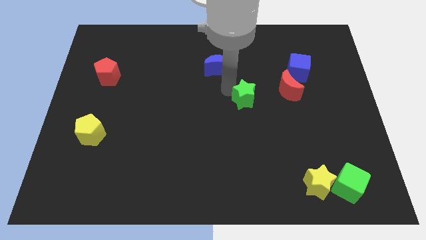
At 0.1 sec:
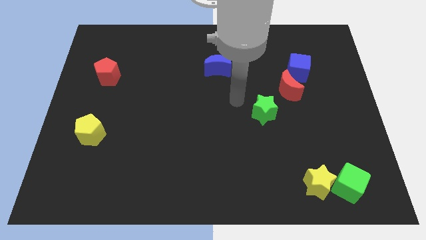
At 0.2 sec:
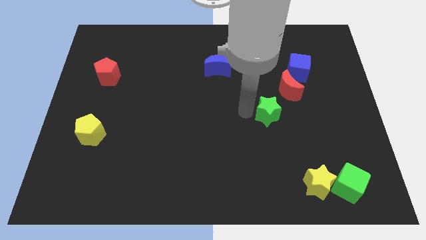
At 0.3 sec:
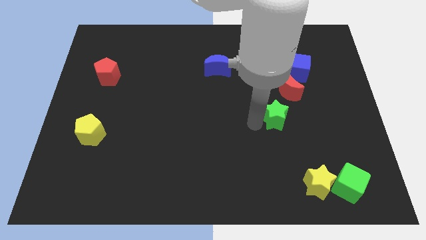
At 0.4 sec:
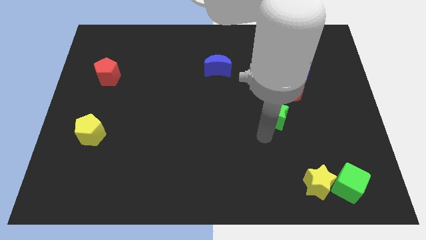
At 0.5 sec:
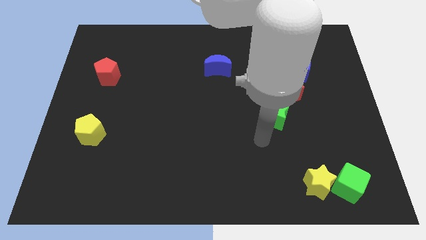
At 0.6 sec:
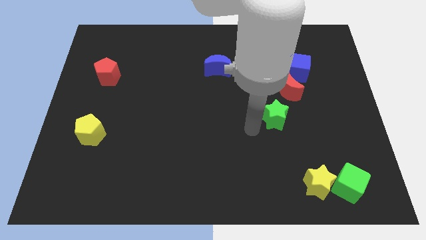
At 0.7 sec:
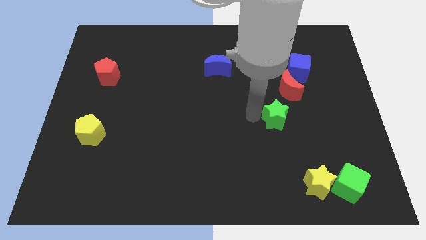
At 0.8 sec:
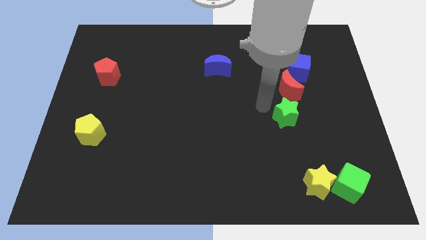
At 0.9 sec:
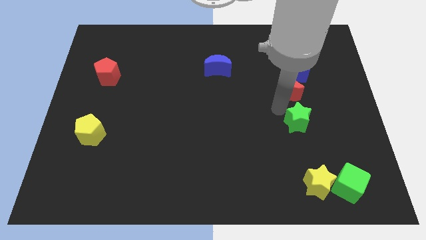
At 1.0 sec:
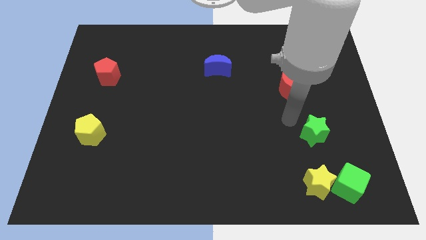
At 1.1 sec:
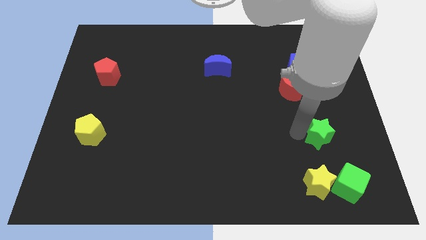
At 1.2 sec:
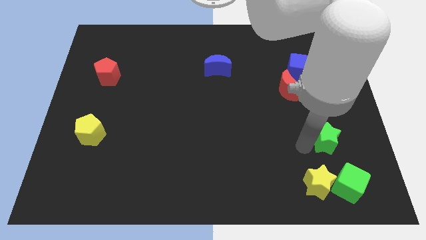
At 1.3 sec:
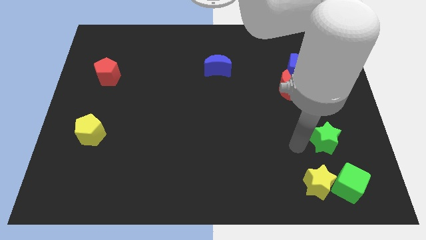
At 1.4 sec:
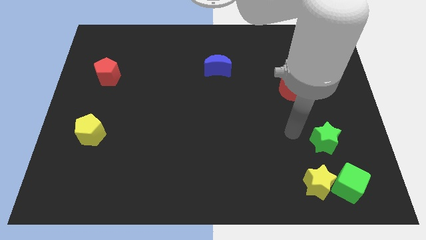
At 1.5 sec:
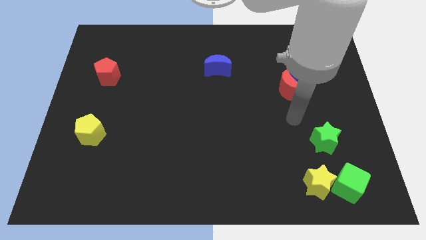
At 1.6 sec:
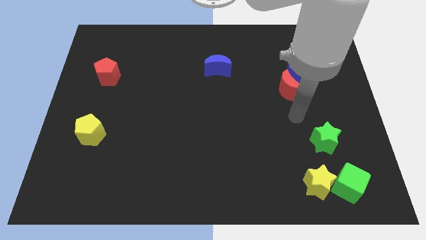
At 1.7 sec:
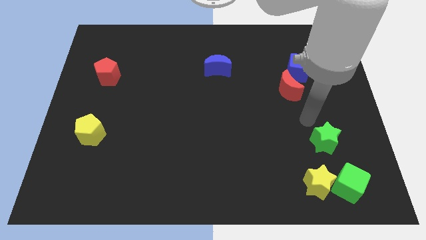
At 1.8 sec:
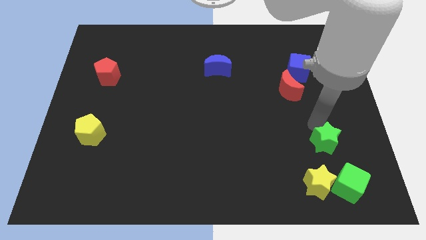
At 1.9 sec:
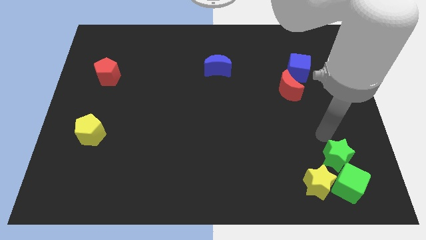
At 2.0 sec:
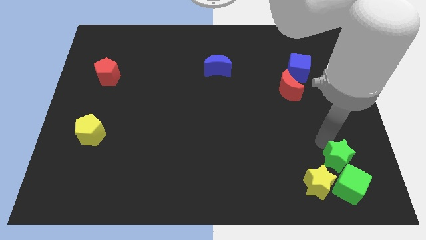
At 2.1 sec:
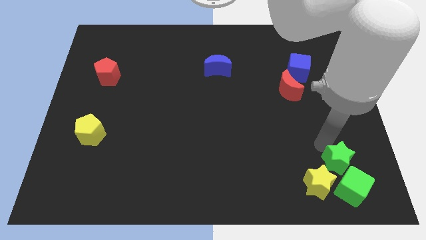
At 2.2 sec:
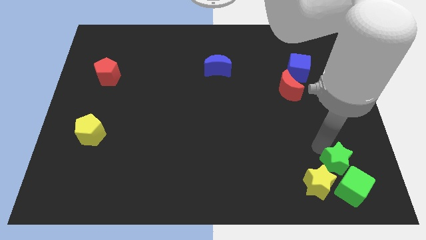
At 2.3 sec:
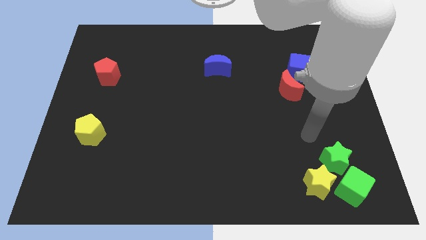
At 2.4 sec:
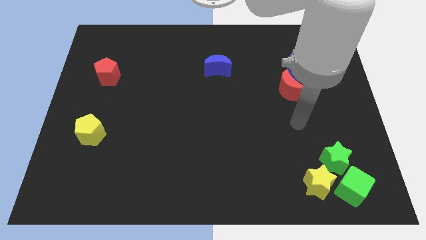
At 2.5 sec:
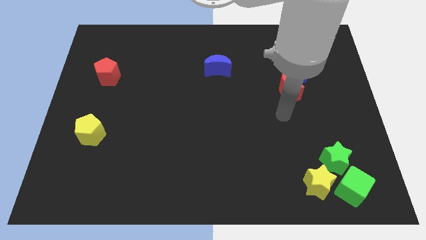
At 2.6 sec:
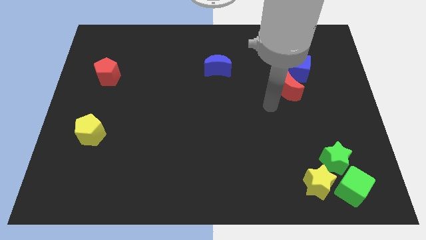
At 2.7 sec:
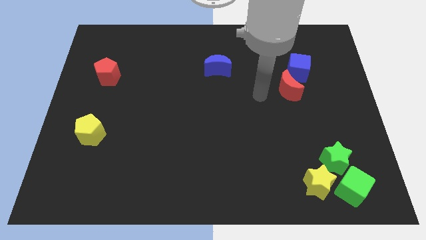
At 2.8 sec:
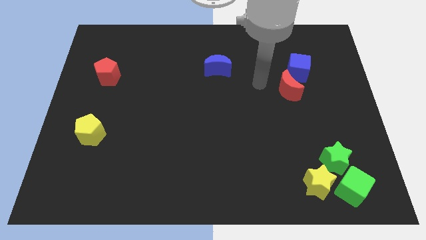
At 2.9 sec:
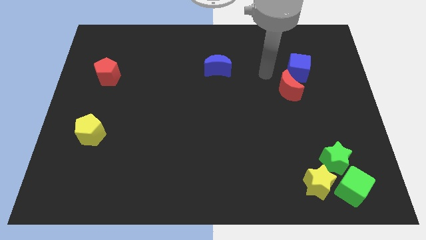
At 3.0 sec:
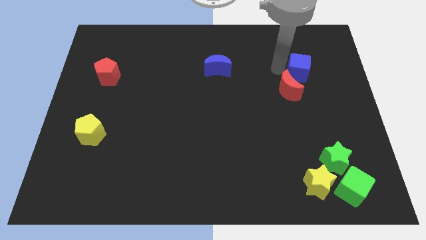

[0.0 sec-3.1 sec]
push the green star into the green cube

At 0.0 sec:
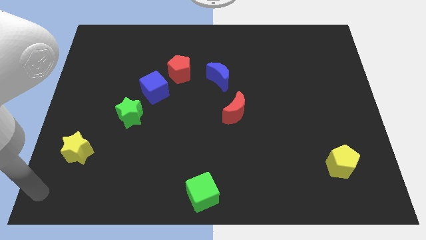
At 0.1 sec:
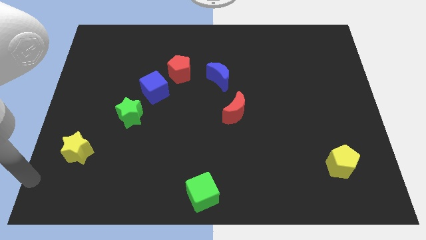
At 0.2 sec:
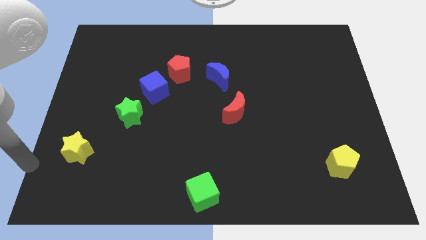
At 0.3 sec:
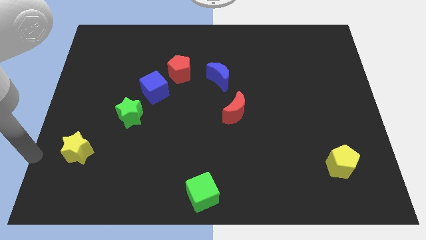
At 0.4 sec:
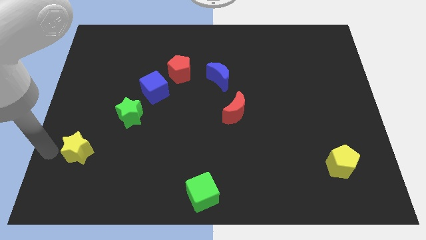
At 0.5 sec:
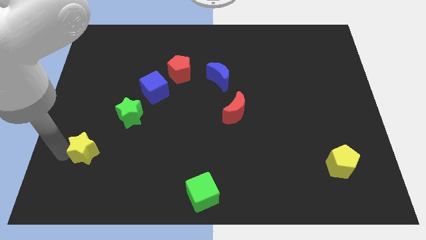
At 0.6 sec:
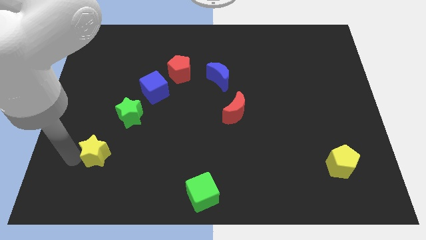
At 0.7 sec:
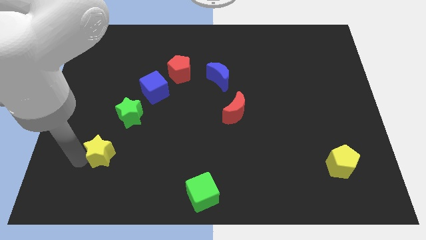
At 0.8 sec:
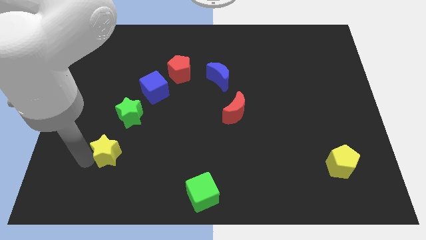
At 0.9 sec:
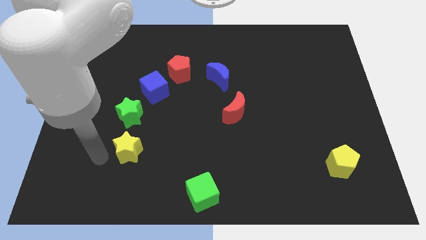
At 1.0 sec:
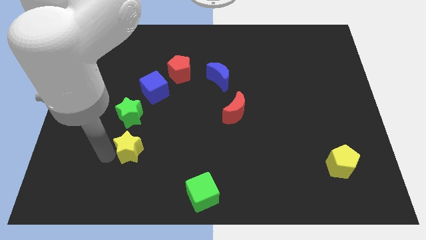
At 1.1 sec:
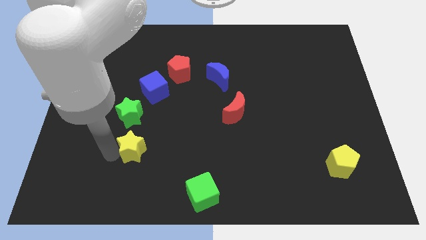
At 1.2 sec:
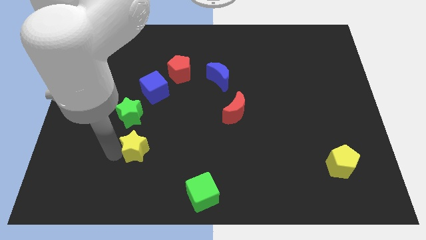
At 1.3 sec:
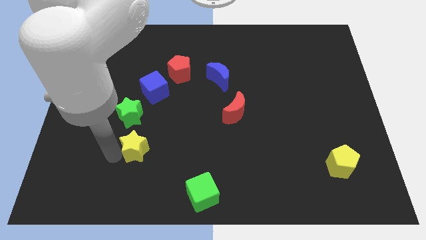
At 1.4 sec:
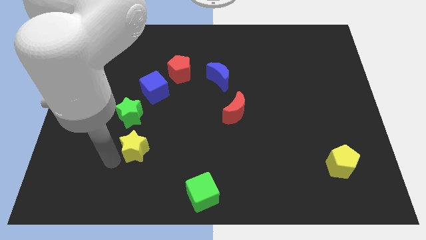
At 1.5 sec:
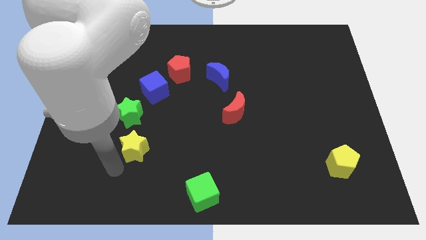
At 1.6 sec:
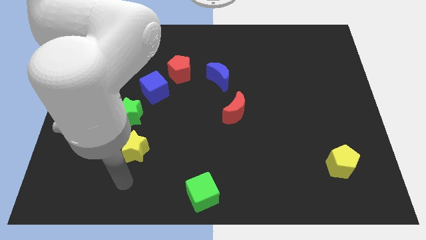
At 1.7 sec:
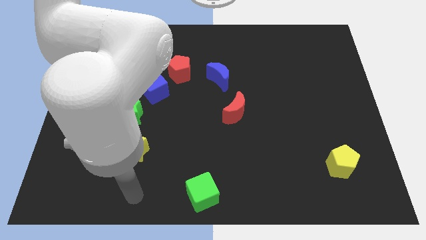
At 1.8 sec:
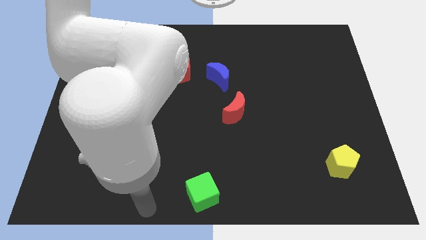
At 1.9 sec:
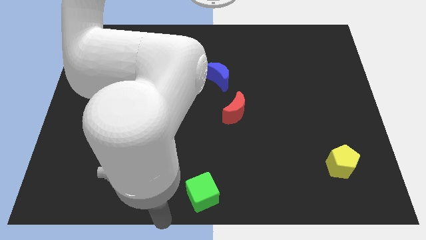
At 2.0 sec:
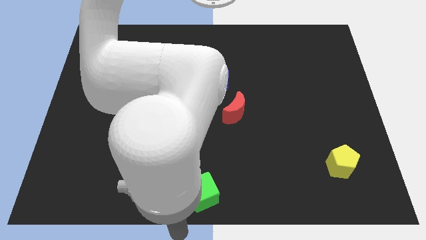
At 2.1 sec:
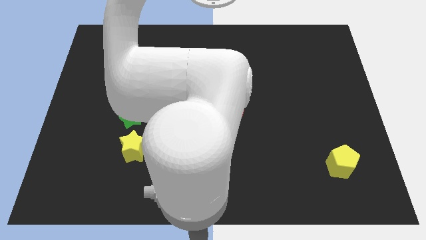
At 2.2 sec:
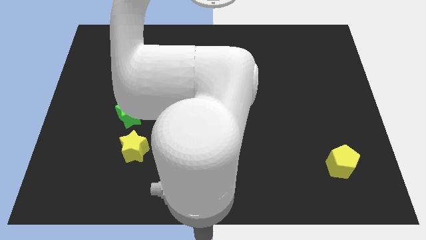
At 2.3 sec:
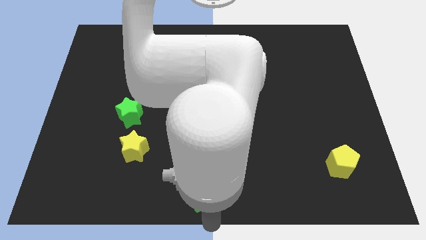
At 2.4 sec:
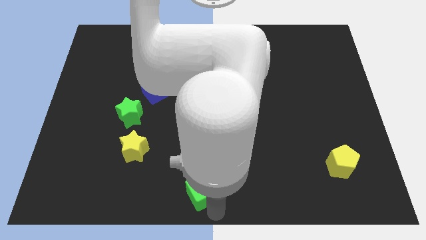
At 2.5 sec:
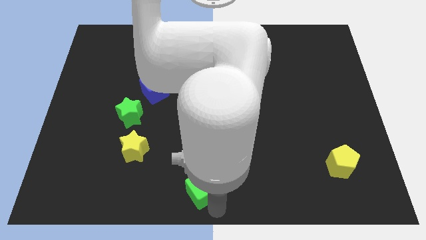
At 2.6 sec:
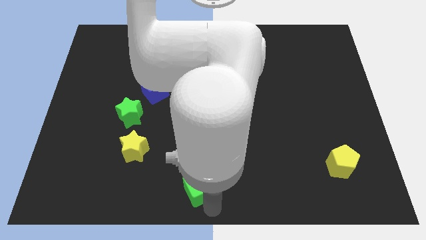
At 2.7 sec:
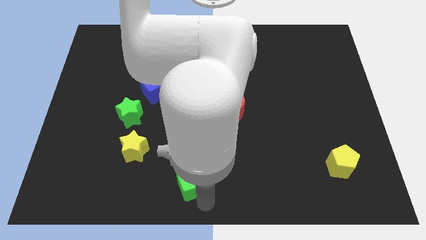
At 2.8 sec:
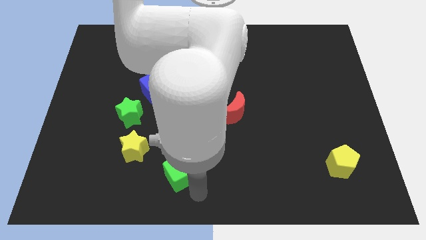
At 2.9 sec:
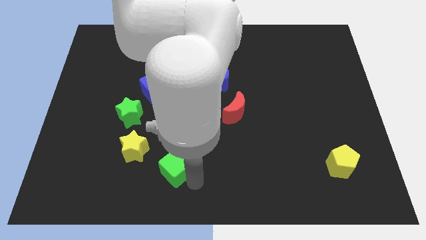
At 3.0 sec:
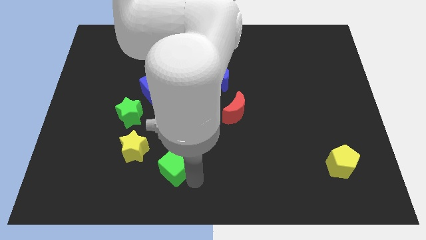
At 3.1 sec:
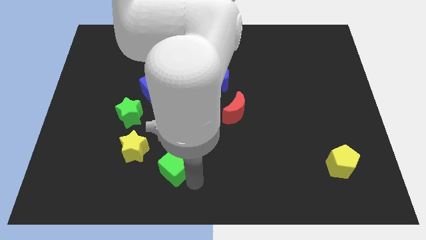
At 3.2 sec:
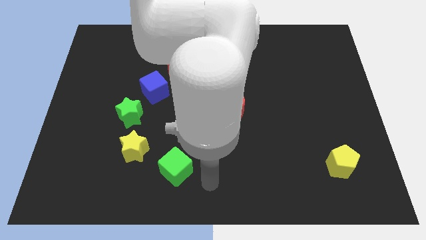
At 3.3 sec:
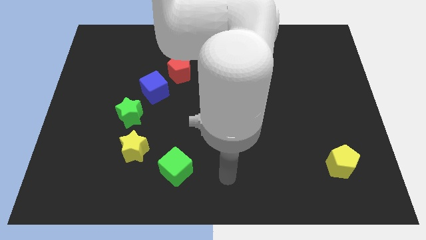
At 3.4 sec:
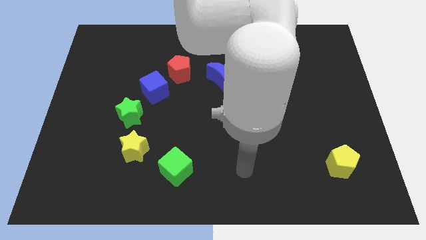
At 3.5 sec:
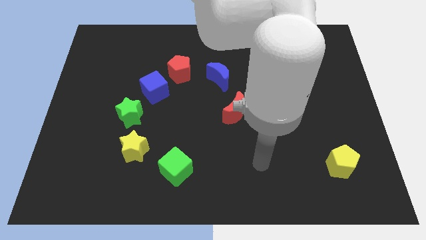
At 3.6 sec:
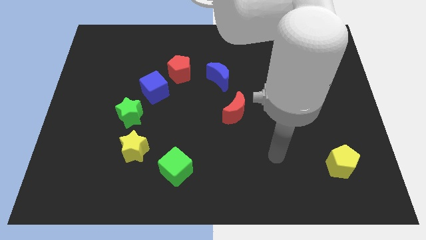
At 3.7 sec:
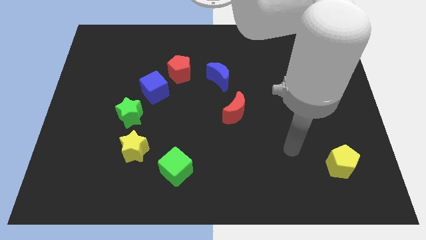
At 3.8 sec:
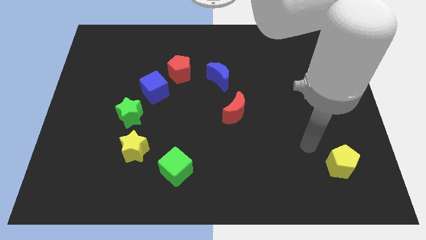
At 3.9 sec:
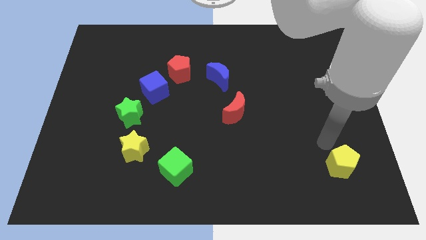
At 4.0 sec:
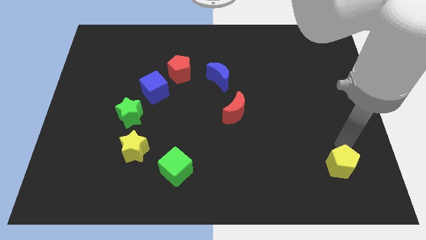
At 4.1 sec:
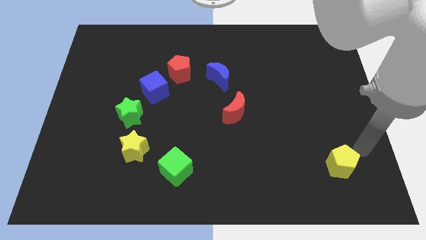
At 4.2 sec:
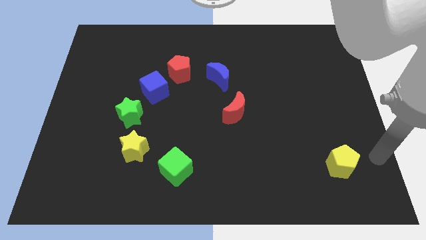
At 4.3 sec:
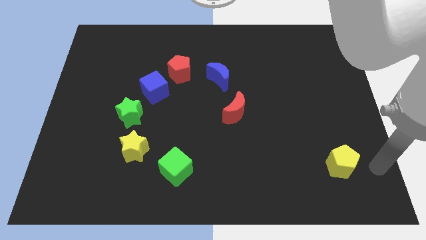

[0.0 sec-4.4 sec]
drag the green cube vertically at the bottom of the red pentagon

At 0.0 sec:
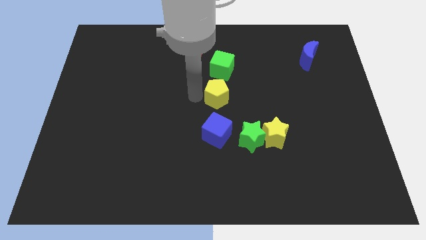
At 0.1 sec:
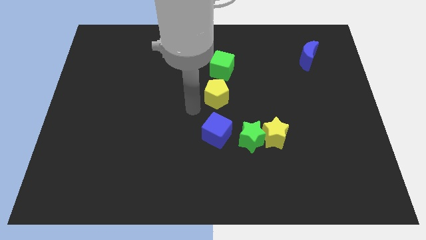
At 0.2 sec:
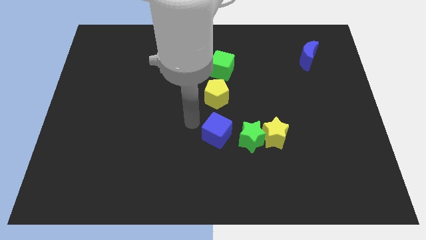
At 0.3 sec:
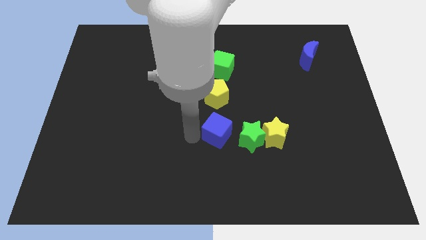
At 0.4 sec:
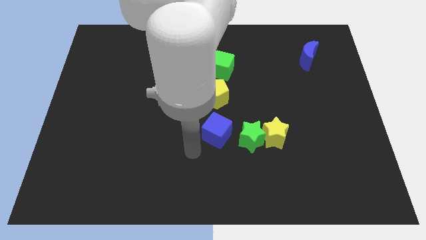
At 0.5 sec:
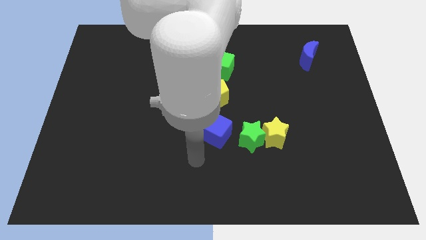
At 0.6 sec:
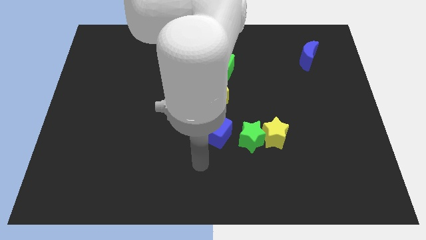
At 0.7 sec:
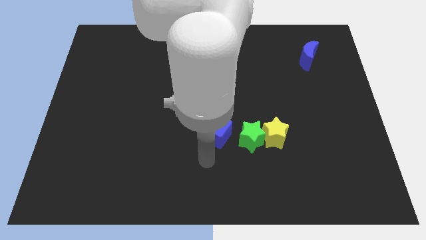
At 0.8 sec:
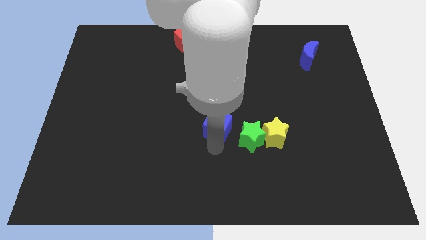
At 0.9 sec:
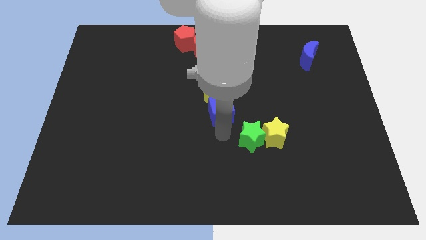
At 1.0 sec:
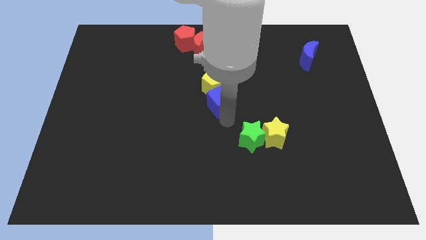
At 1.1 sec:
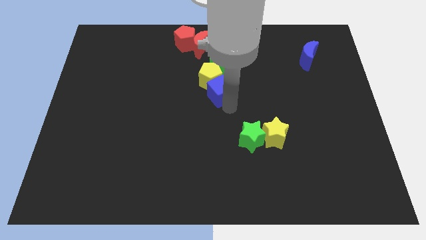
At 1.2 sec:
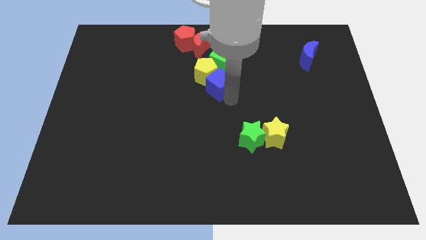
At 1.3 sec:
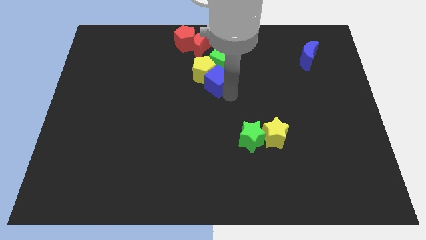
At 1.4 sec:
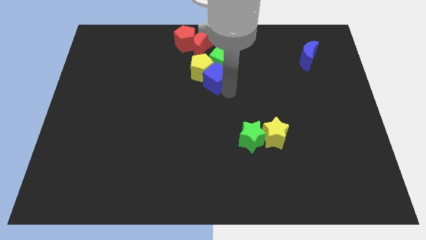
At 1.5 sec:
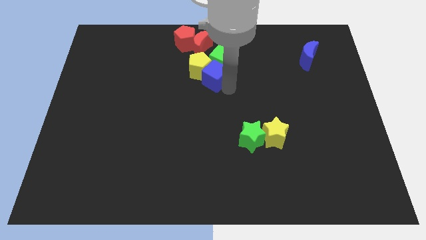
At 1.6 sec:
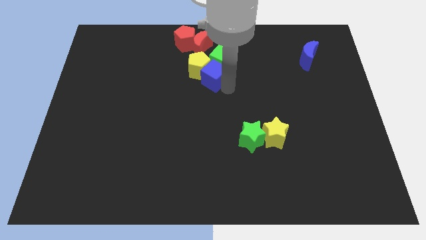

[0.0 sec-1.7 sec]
push the blue cube into the yellow pentagon
